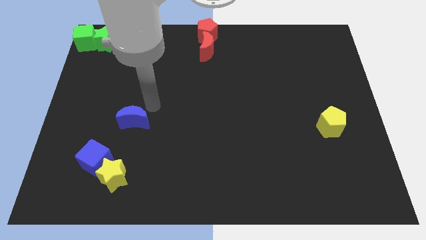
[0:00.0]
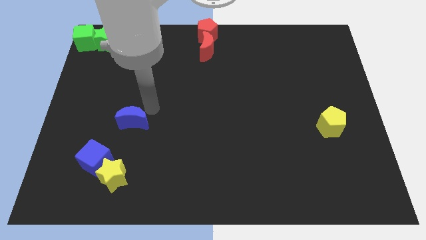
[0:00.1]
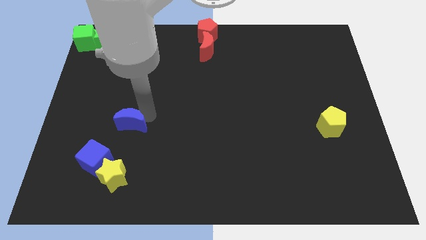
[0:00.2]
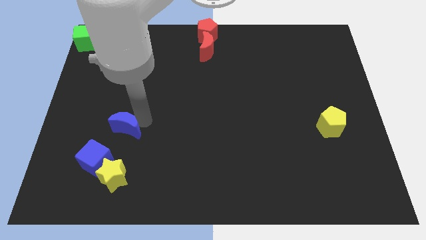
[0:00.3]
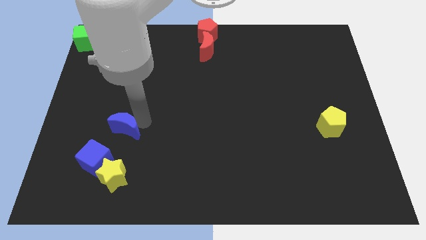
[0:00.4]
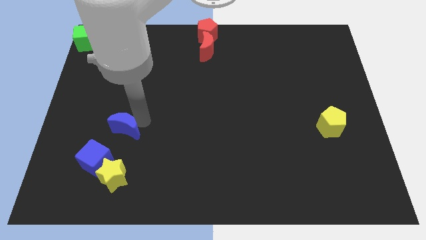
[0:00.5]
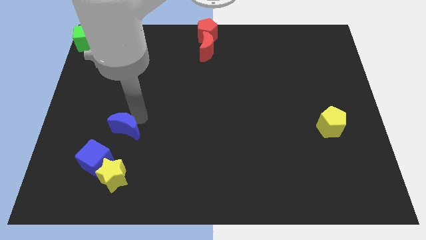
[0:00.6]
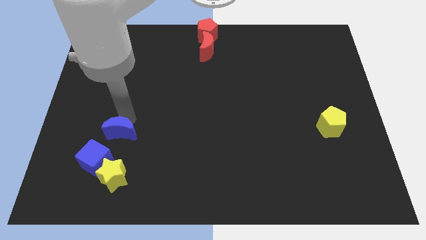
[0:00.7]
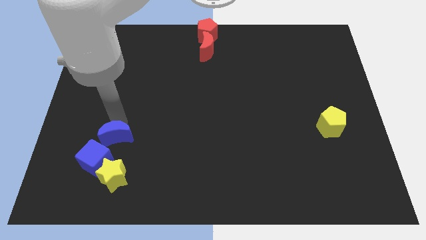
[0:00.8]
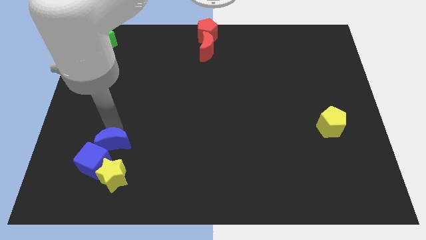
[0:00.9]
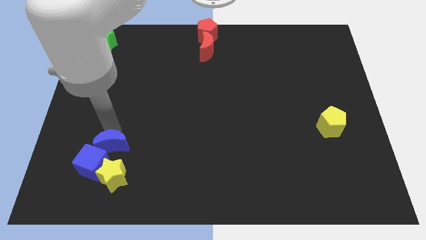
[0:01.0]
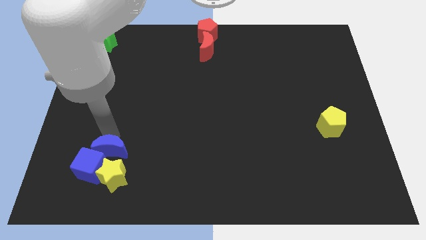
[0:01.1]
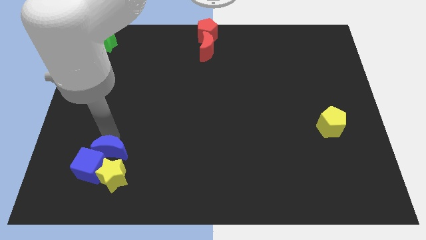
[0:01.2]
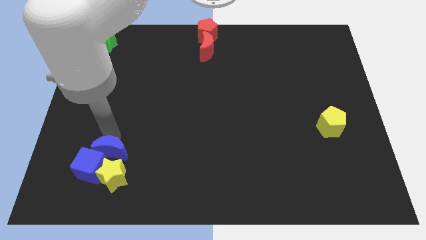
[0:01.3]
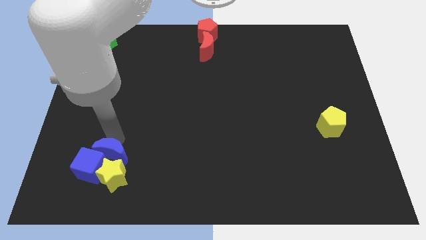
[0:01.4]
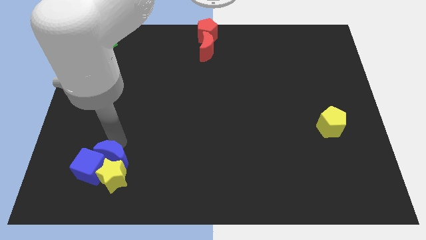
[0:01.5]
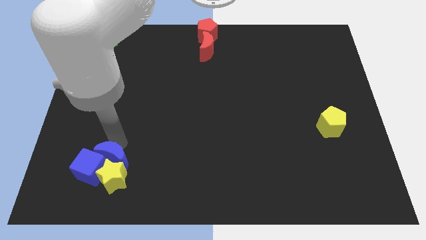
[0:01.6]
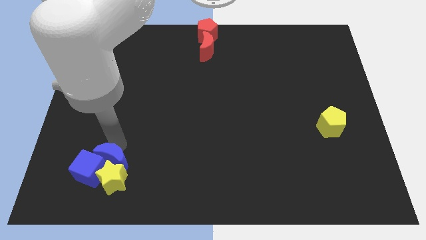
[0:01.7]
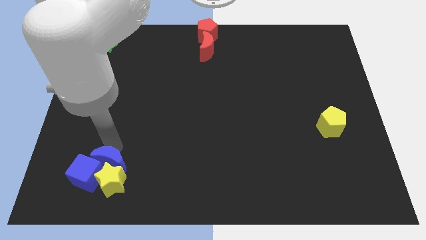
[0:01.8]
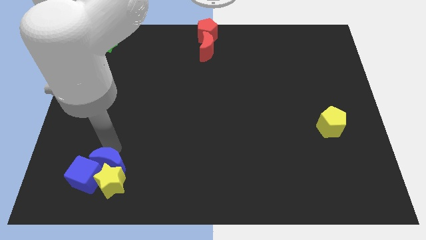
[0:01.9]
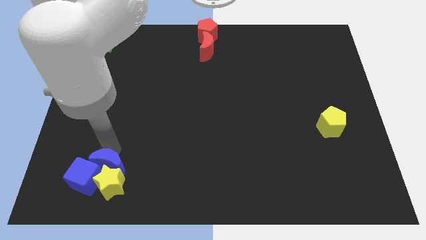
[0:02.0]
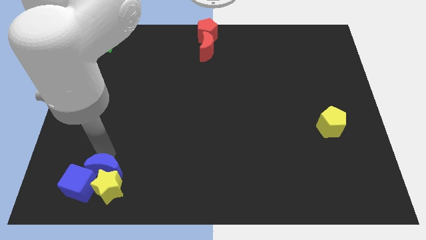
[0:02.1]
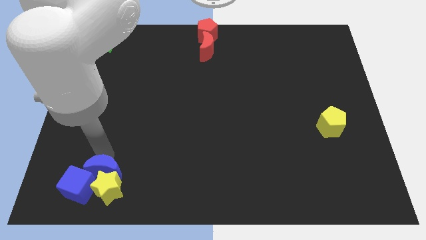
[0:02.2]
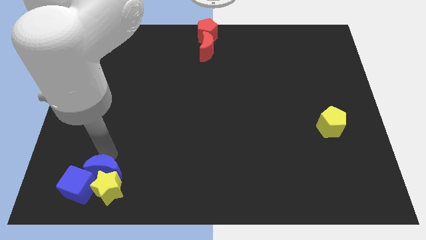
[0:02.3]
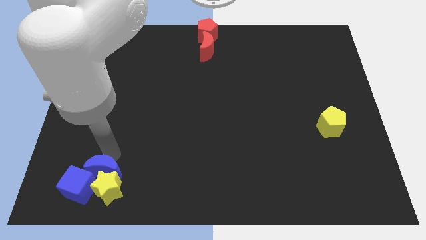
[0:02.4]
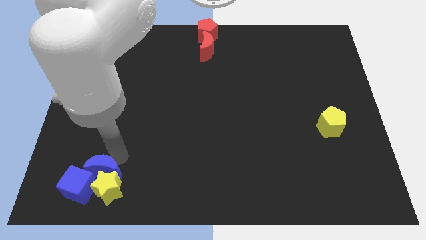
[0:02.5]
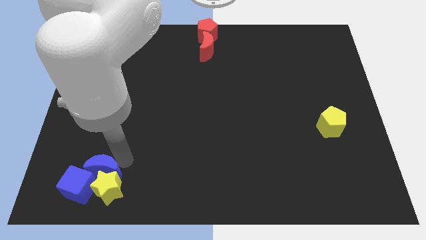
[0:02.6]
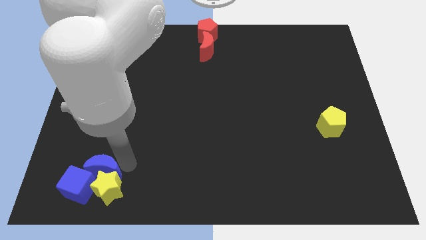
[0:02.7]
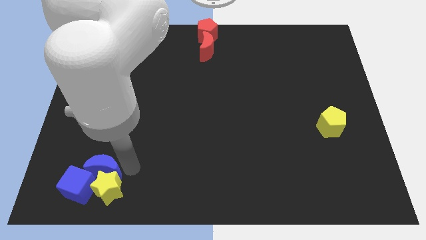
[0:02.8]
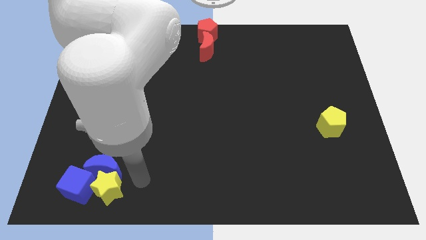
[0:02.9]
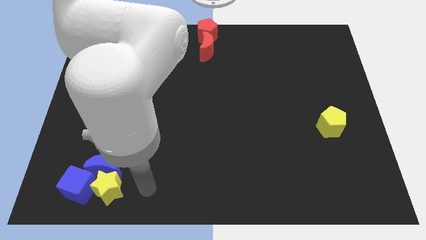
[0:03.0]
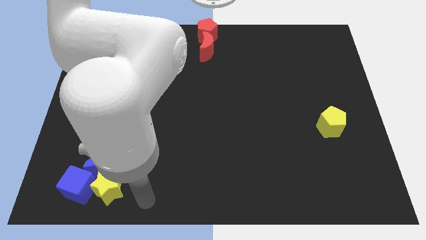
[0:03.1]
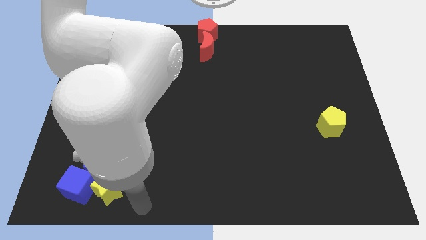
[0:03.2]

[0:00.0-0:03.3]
push the blue crescent into the blue cube and the yellow star

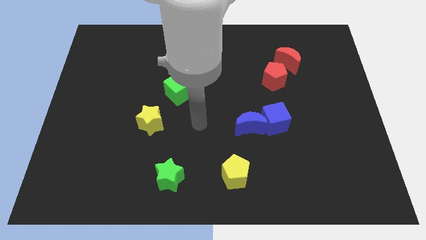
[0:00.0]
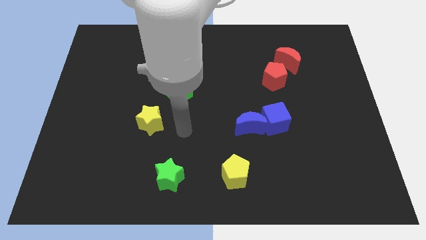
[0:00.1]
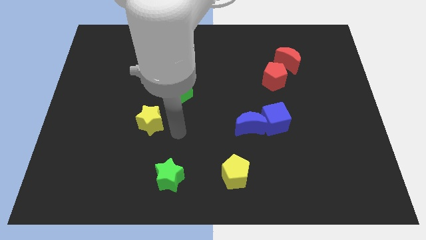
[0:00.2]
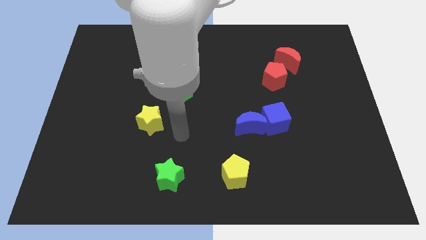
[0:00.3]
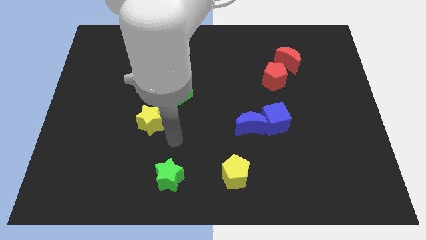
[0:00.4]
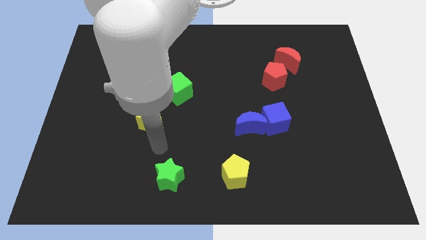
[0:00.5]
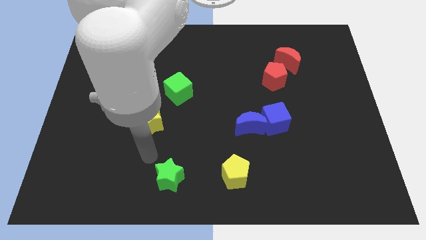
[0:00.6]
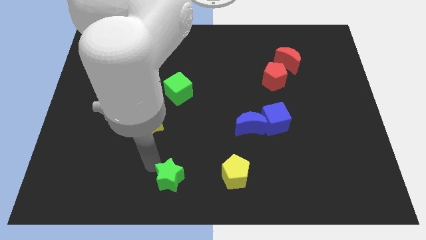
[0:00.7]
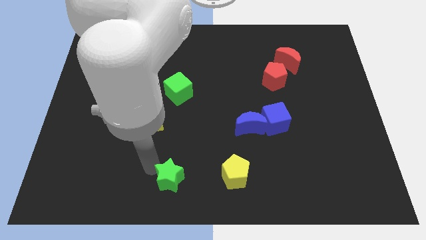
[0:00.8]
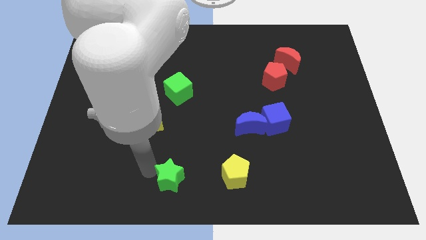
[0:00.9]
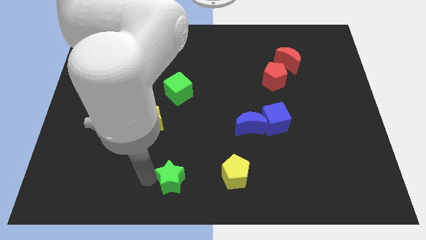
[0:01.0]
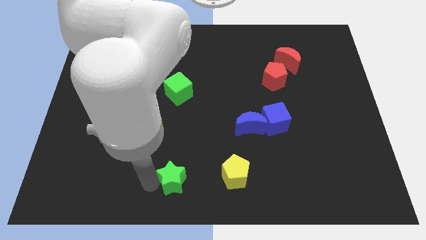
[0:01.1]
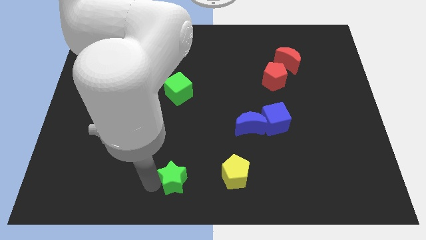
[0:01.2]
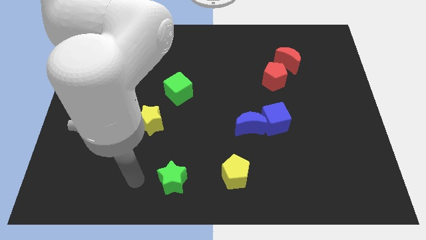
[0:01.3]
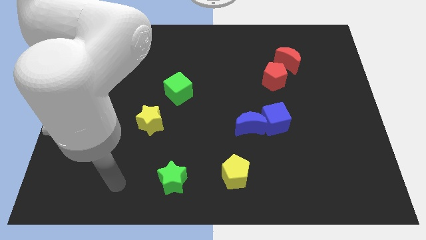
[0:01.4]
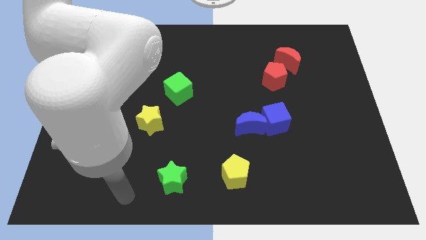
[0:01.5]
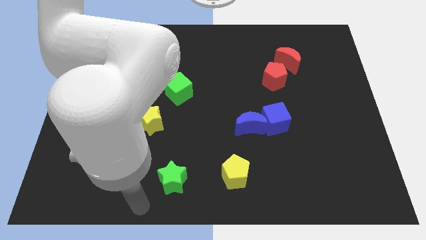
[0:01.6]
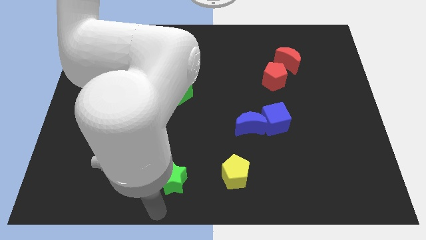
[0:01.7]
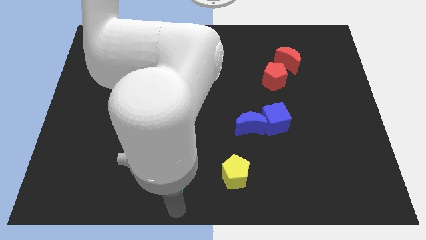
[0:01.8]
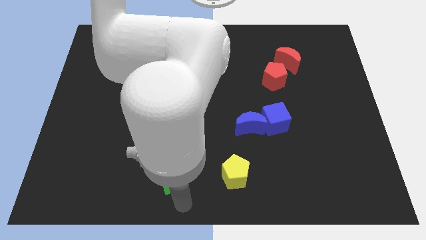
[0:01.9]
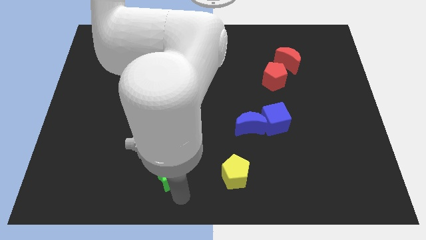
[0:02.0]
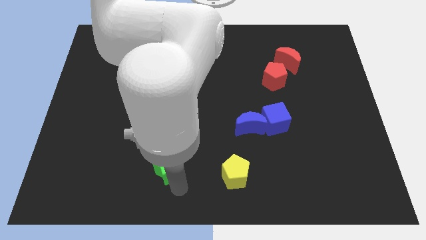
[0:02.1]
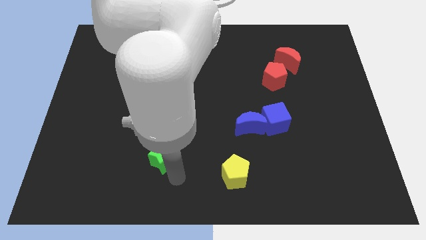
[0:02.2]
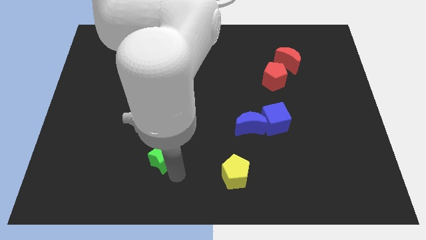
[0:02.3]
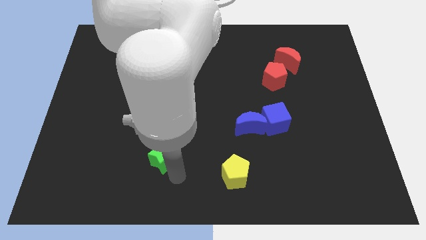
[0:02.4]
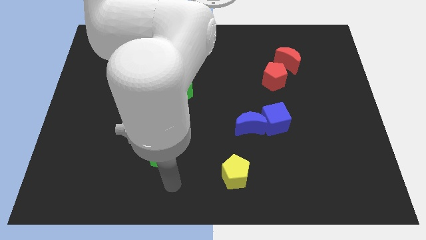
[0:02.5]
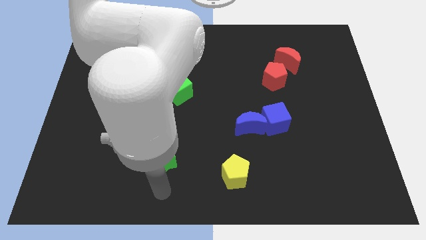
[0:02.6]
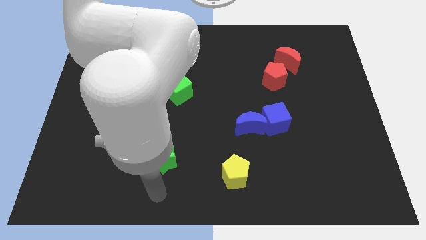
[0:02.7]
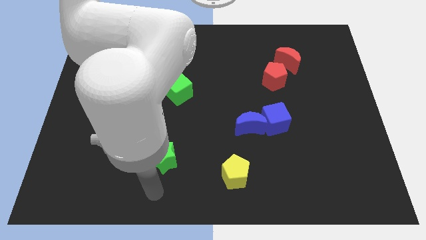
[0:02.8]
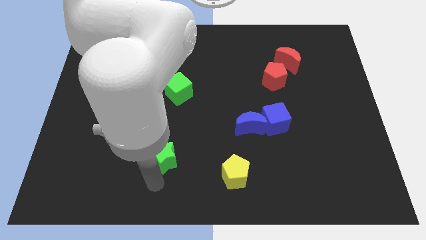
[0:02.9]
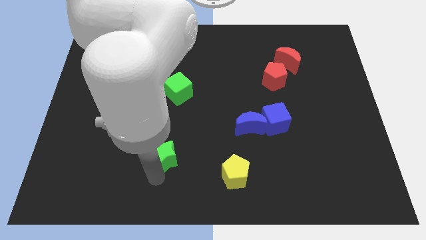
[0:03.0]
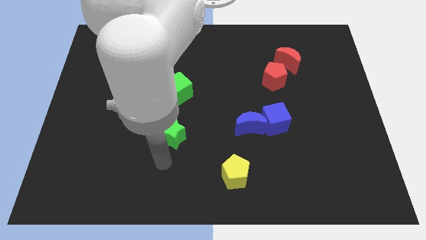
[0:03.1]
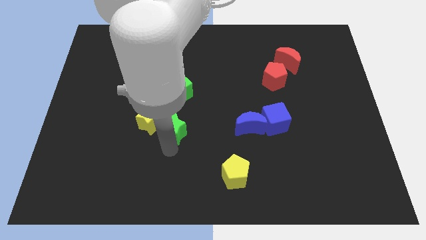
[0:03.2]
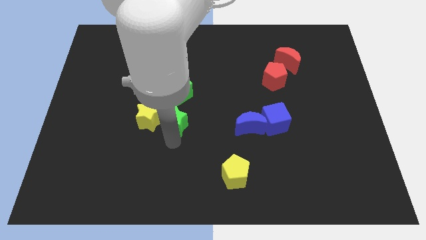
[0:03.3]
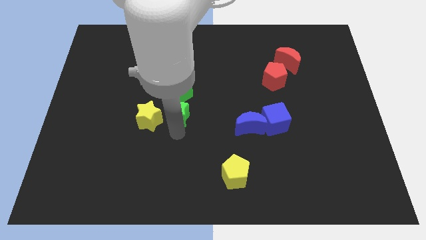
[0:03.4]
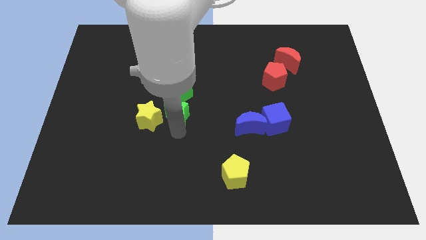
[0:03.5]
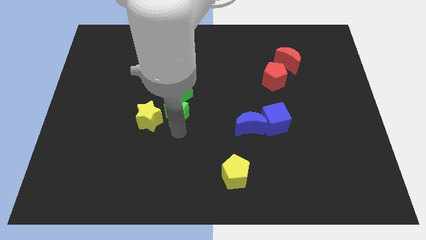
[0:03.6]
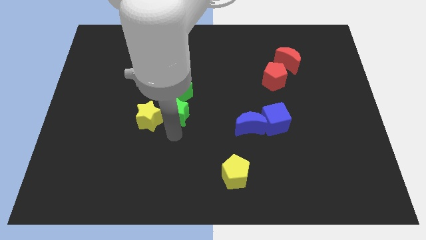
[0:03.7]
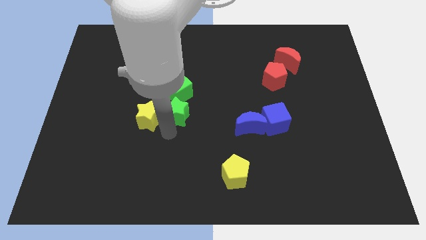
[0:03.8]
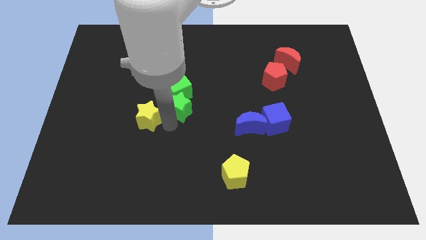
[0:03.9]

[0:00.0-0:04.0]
place the green star below the green cube

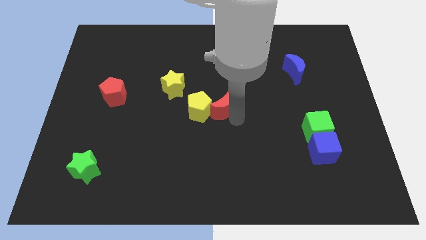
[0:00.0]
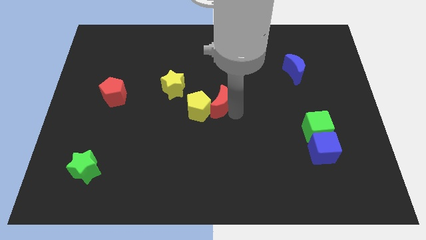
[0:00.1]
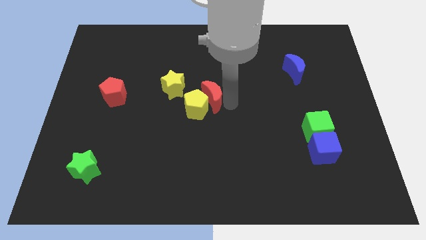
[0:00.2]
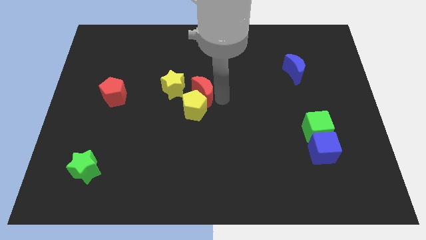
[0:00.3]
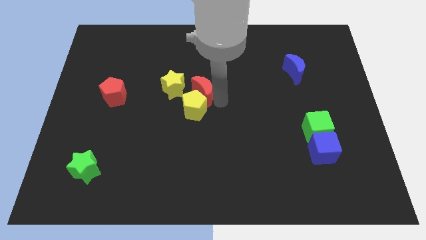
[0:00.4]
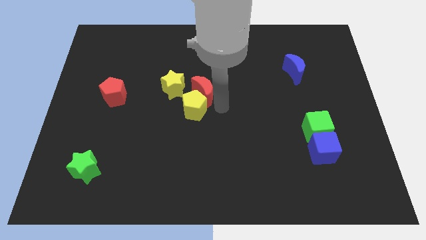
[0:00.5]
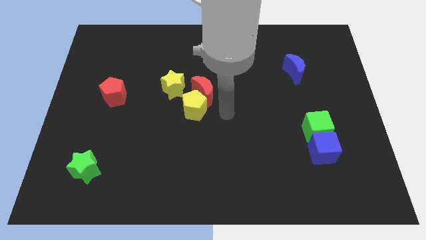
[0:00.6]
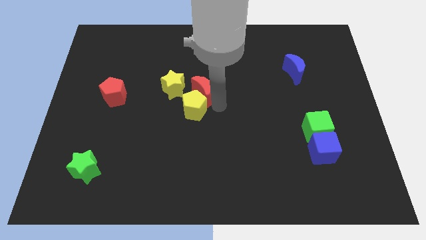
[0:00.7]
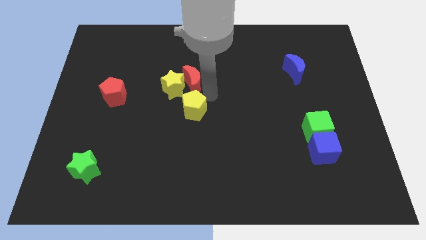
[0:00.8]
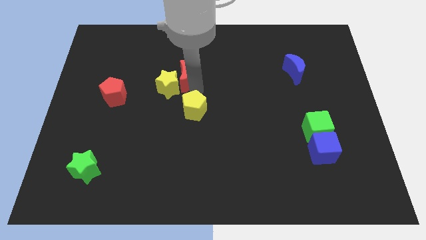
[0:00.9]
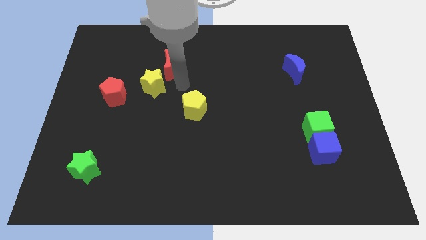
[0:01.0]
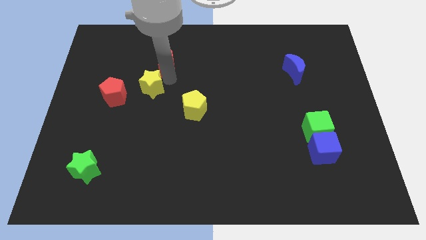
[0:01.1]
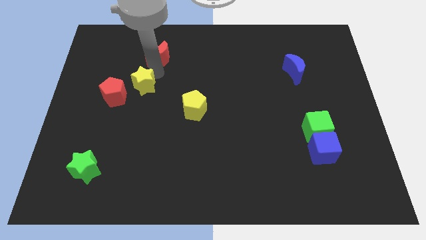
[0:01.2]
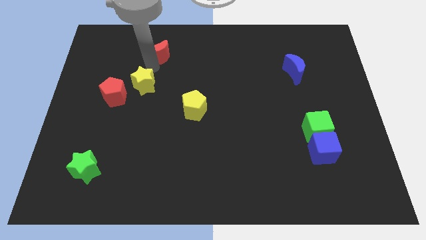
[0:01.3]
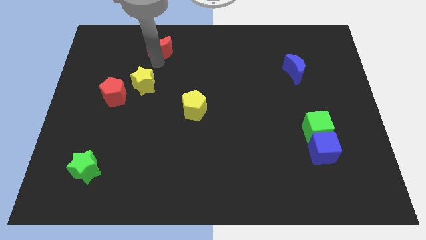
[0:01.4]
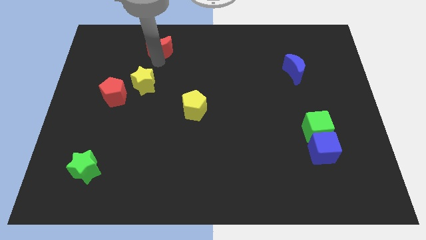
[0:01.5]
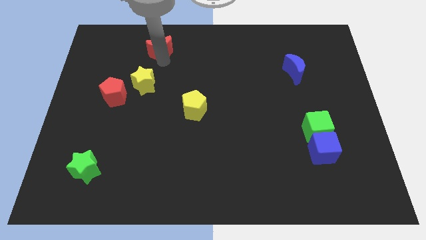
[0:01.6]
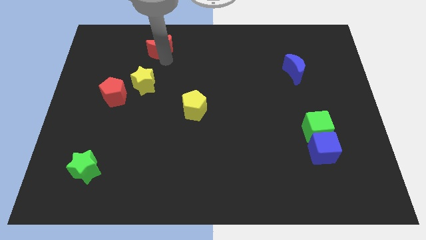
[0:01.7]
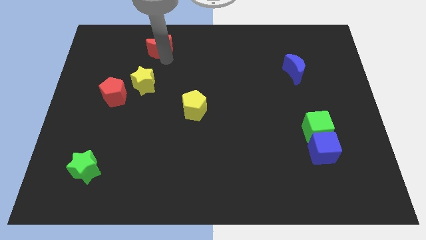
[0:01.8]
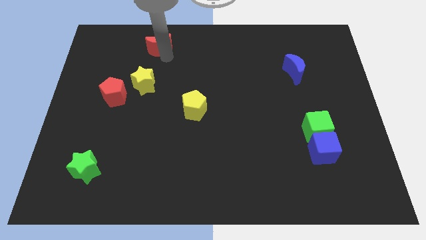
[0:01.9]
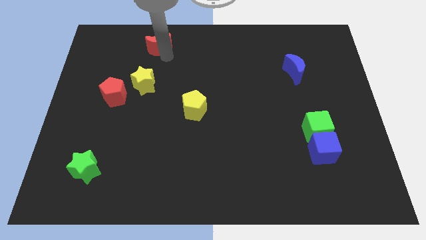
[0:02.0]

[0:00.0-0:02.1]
push the red crescent to the top of the board
